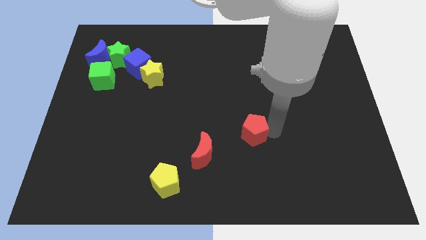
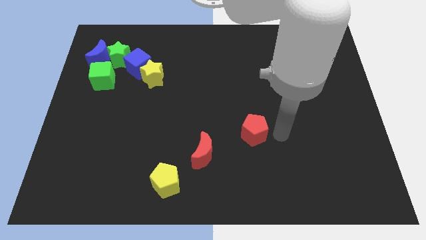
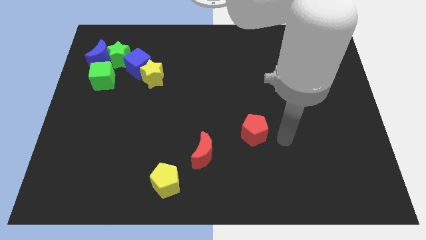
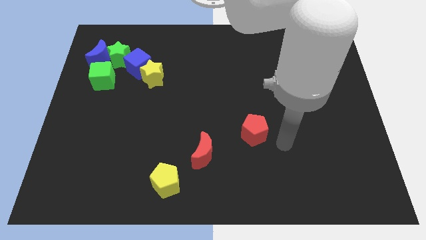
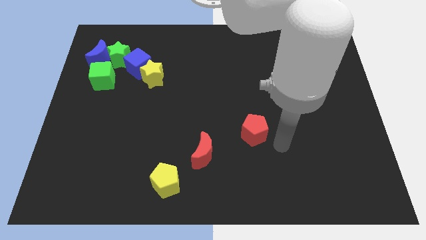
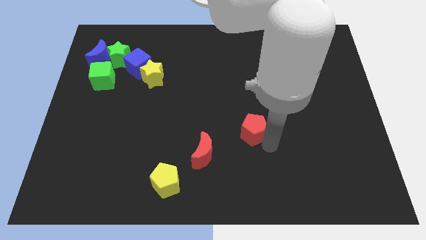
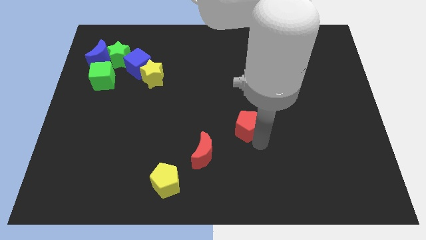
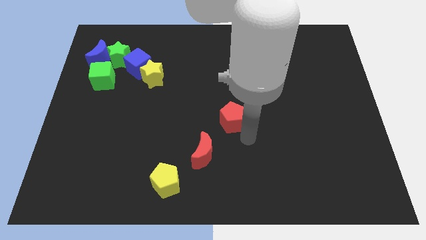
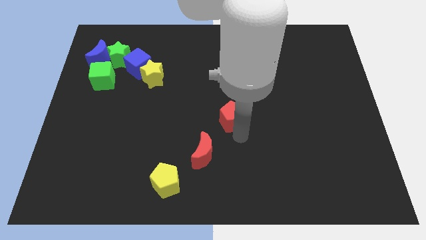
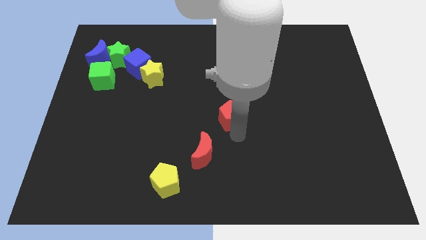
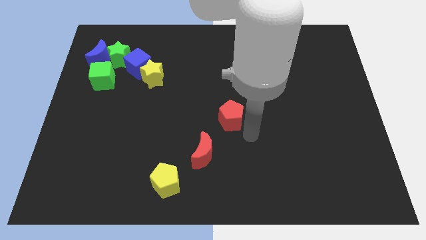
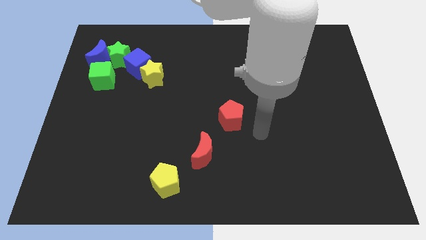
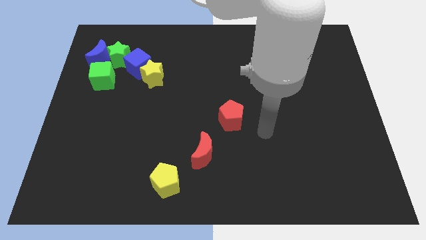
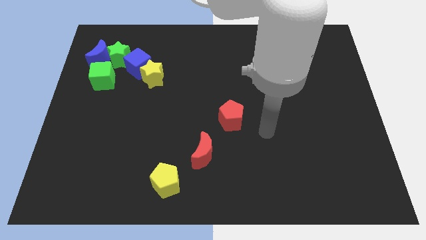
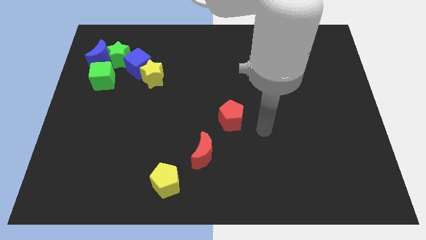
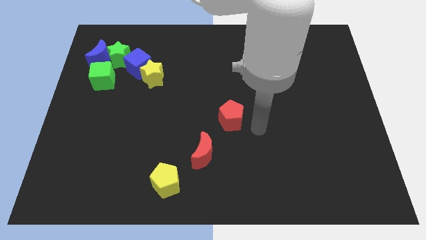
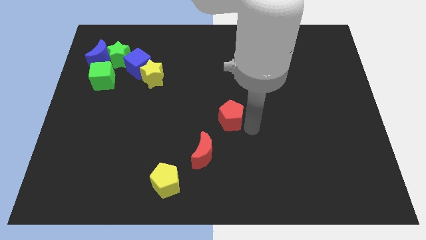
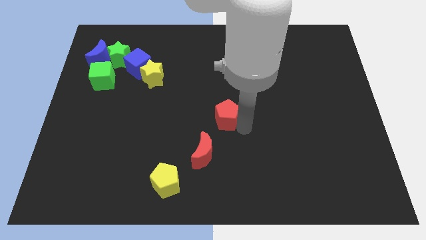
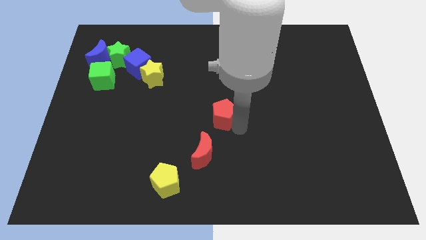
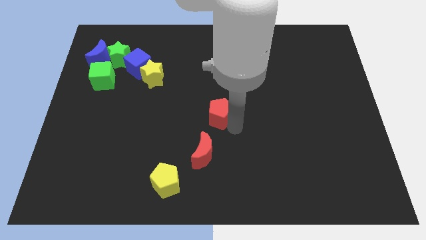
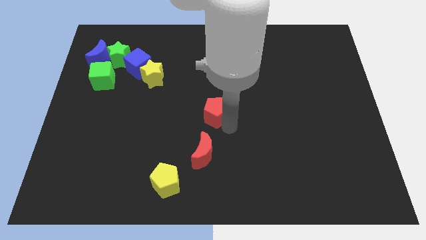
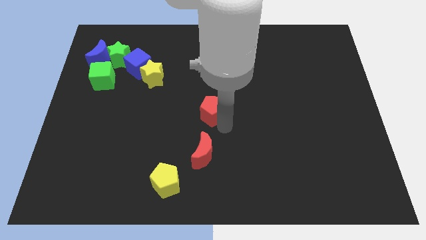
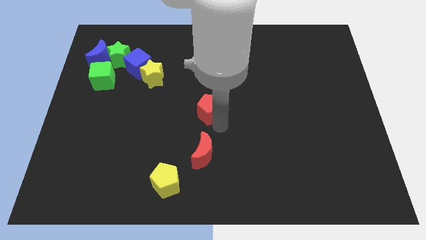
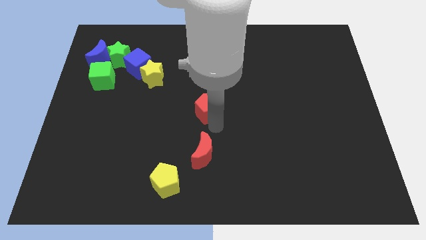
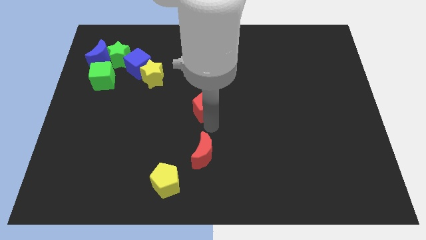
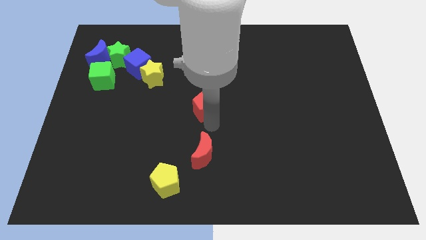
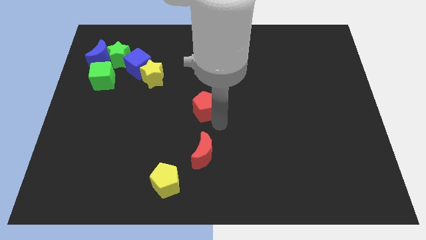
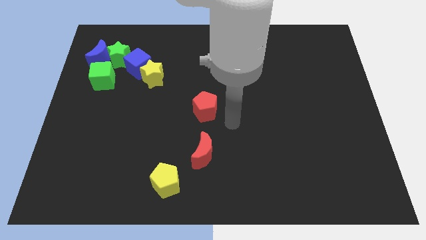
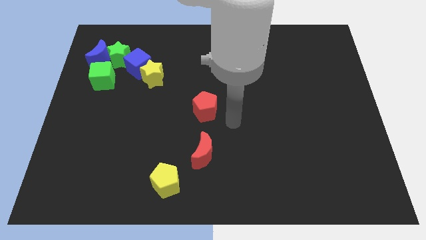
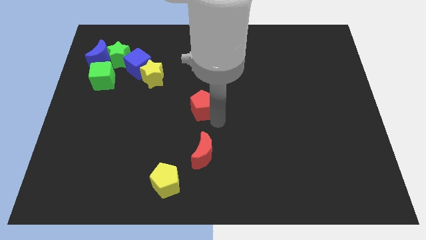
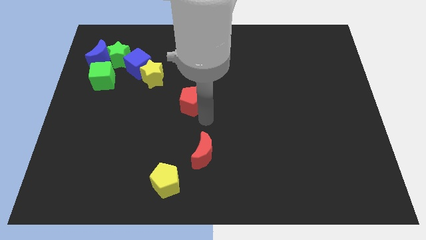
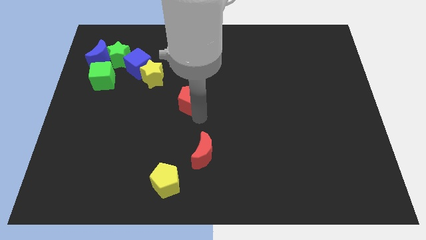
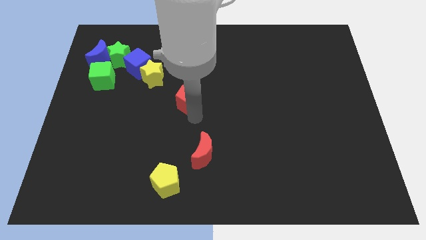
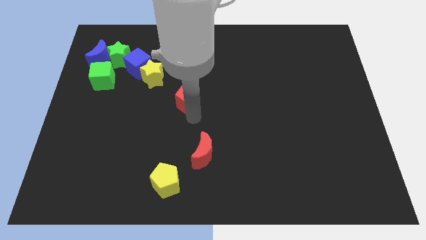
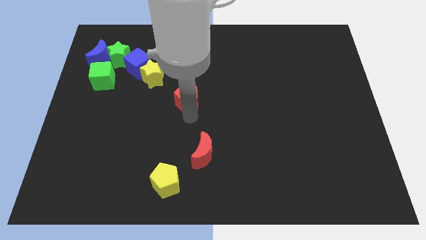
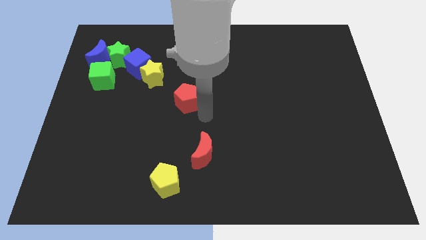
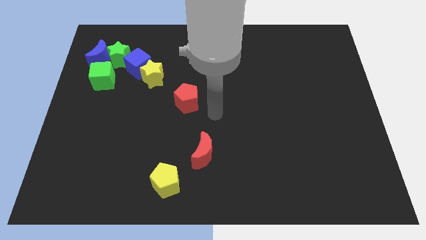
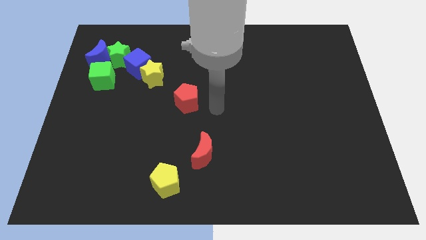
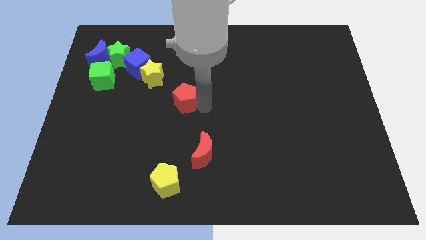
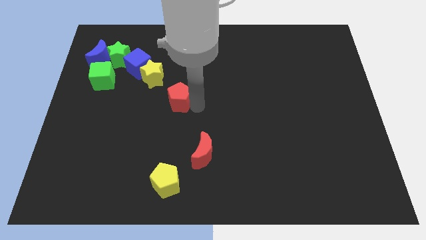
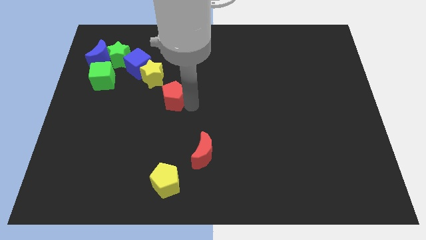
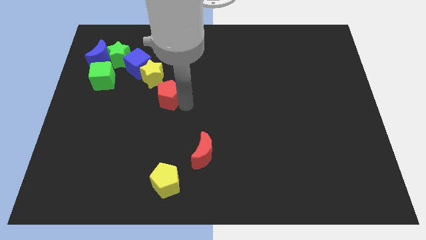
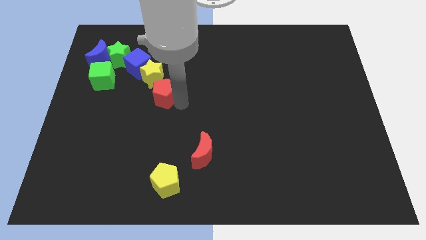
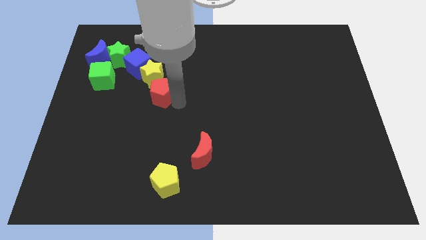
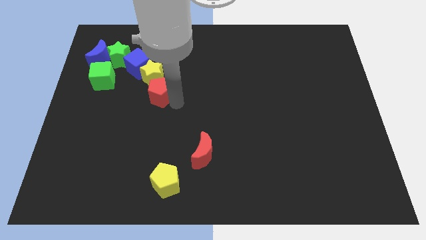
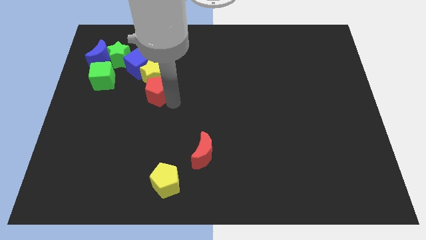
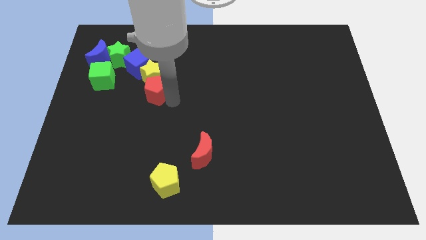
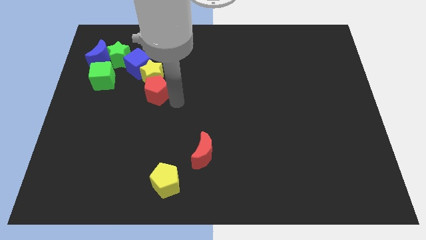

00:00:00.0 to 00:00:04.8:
push the red pentagon towards the bottom side of the yellow star

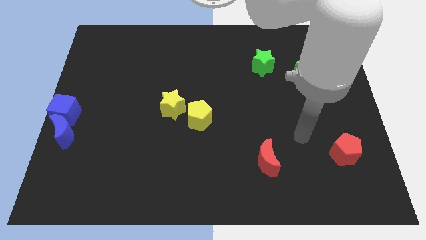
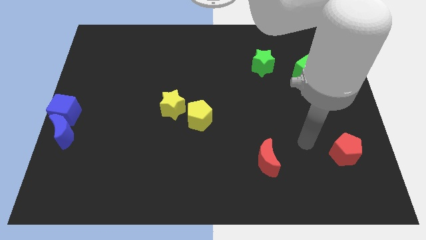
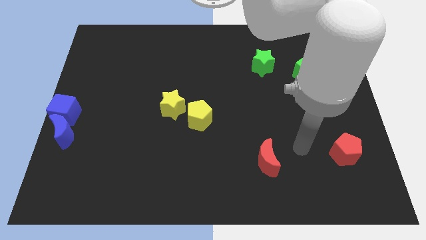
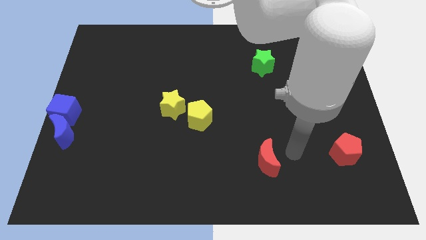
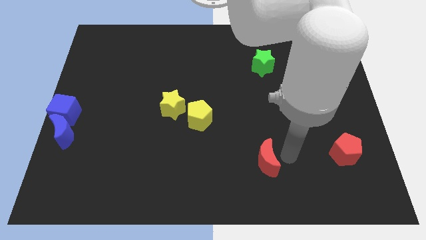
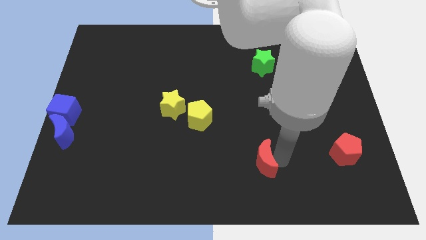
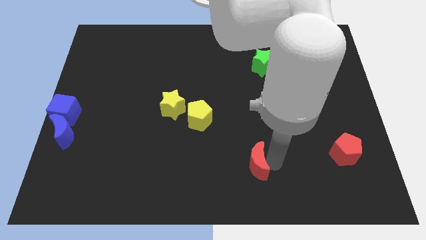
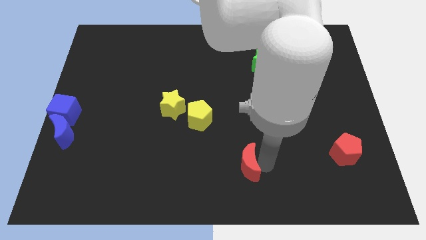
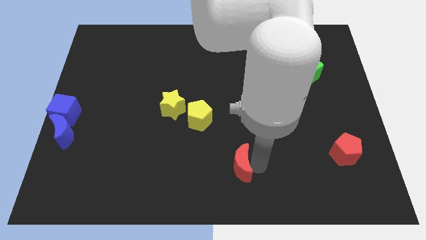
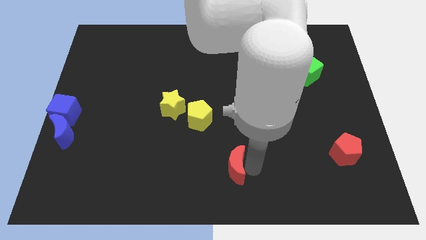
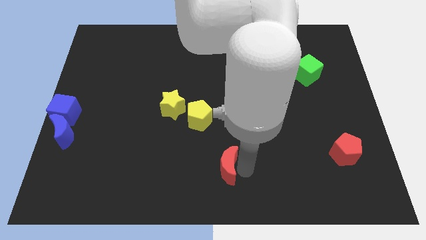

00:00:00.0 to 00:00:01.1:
move the red moon diagonally to the bottom right of the yelow pentagon

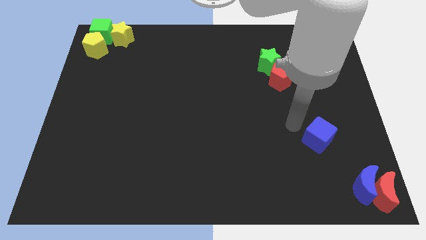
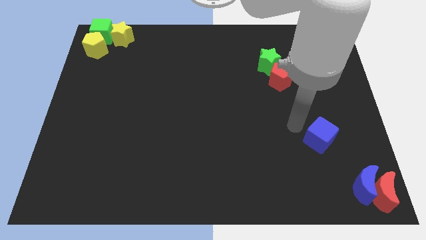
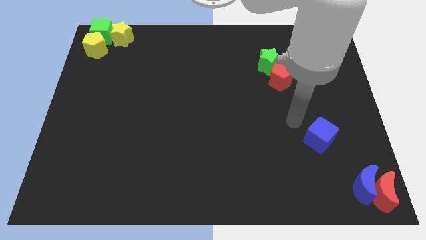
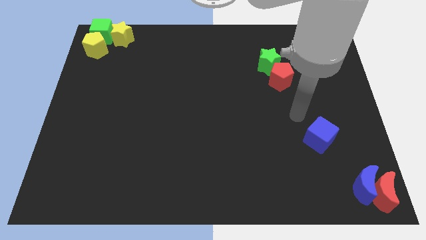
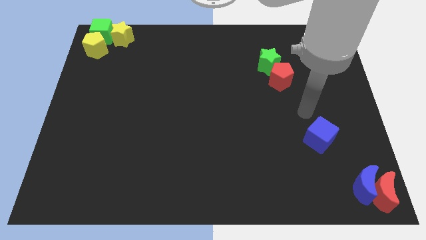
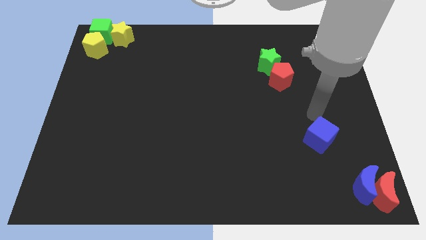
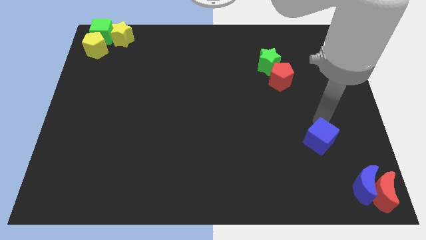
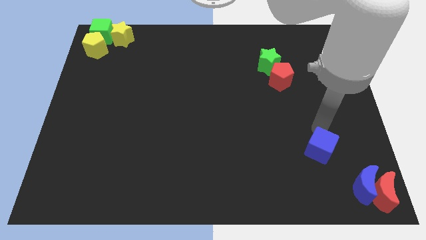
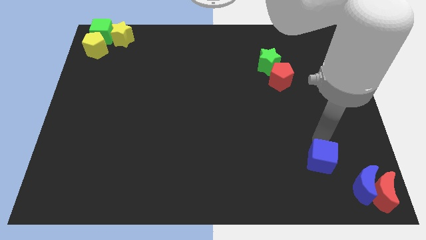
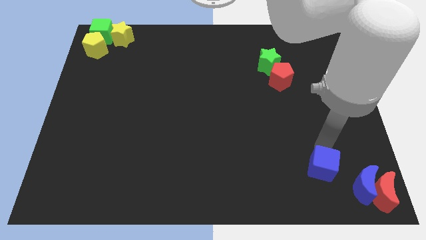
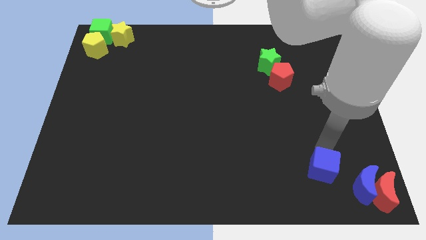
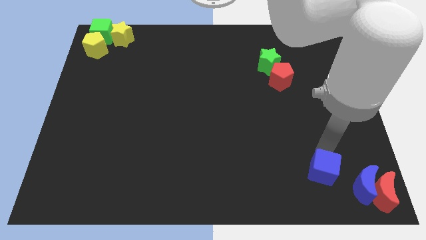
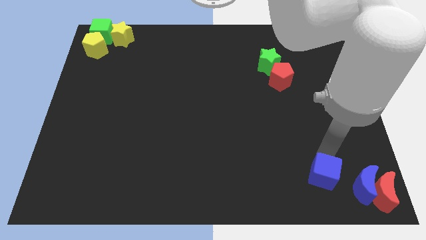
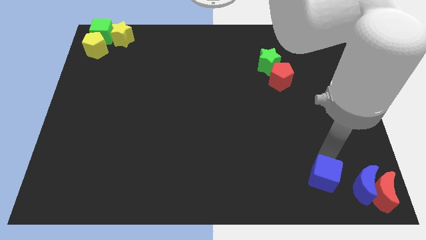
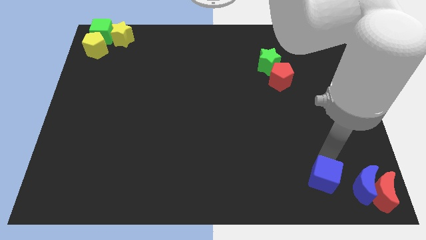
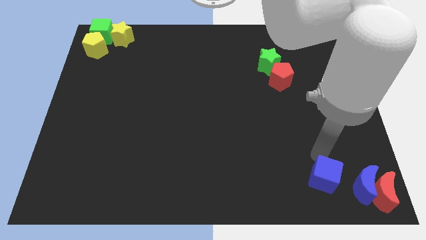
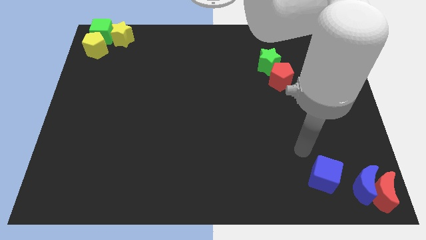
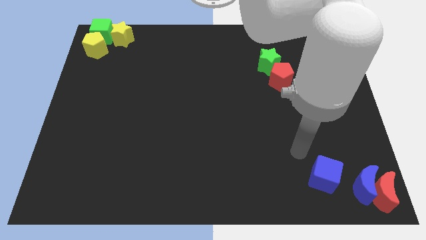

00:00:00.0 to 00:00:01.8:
push the blue cube to the left side of the blue moon

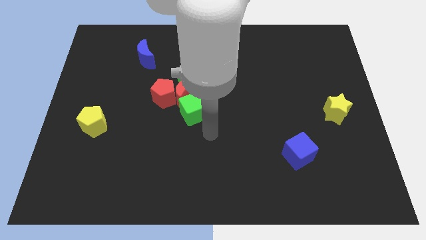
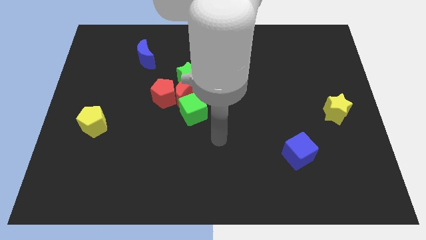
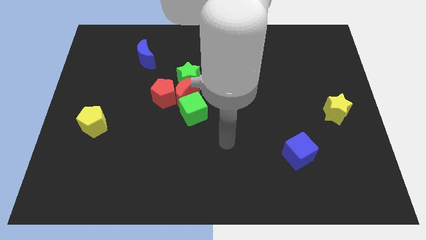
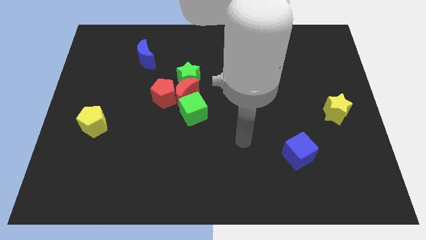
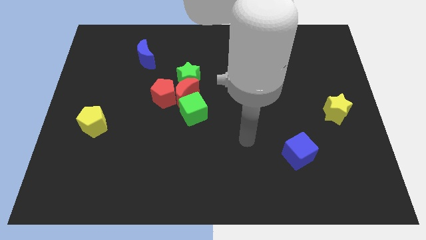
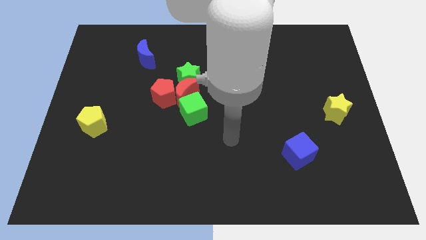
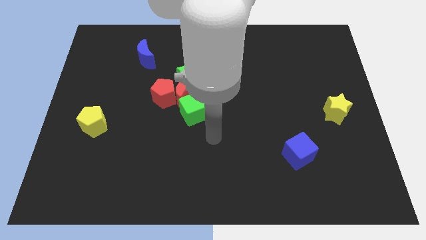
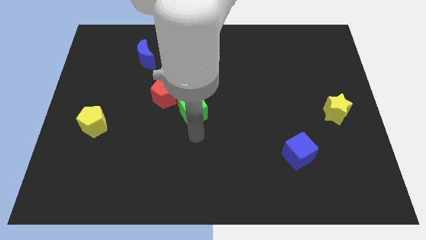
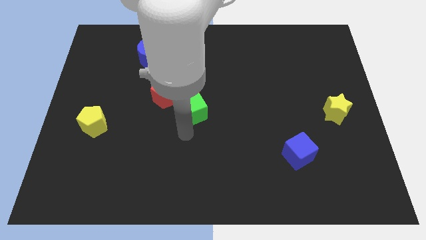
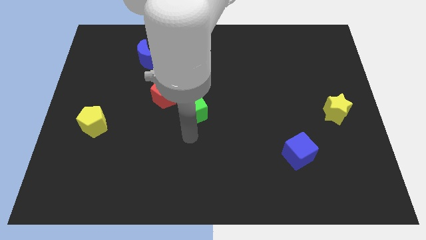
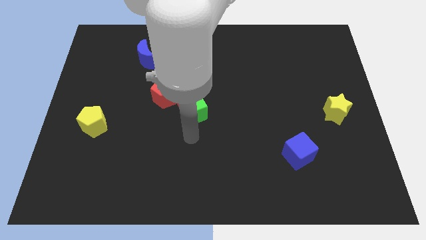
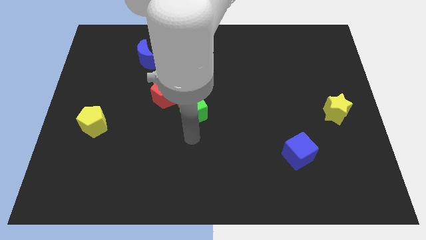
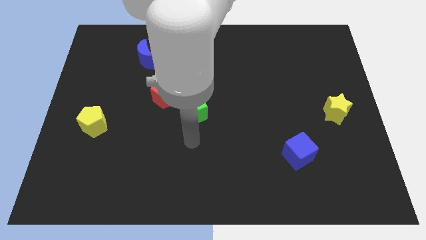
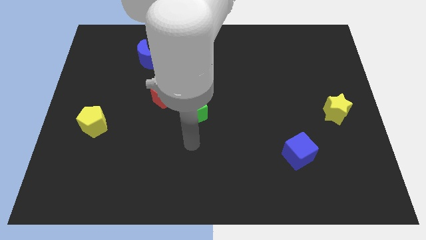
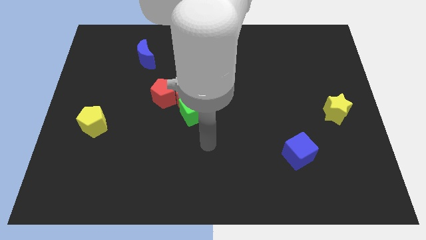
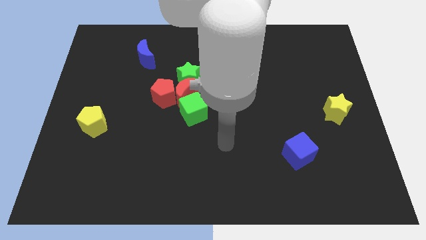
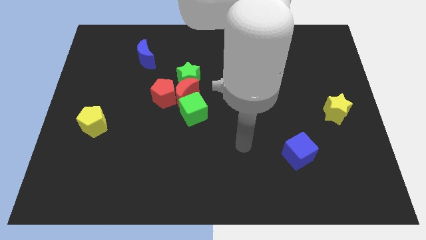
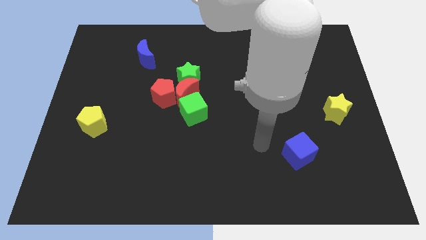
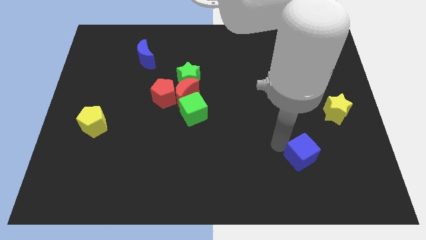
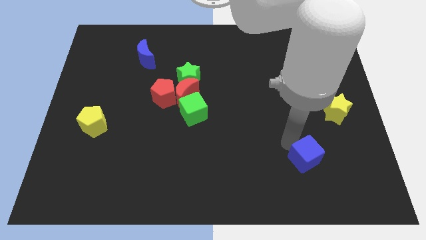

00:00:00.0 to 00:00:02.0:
touch the blue moon
